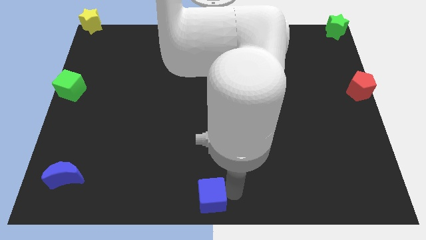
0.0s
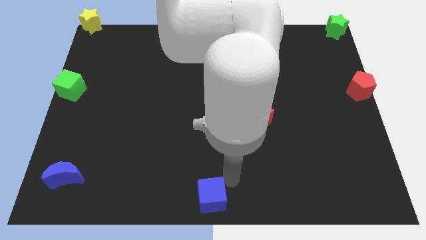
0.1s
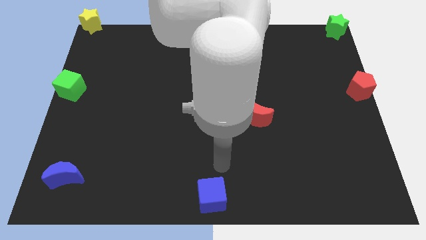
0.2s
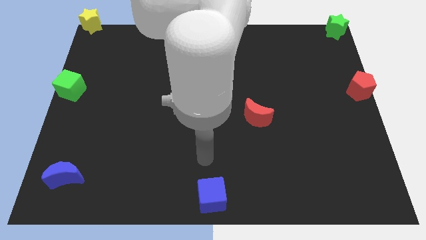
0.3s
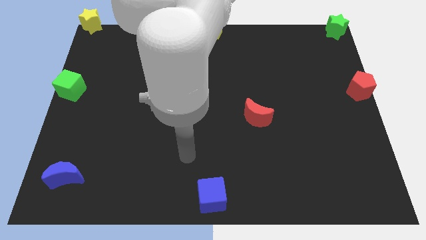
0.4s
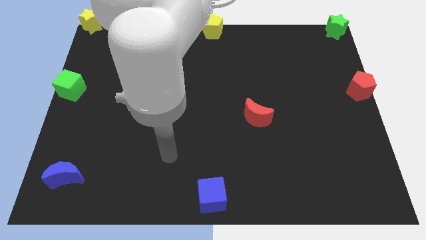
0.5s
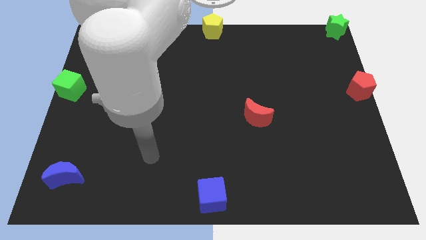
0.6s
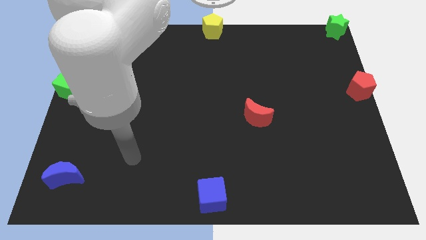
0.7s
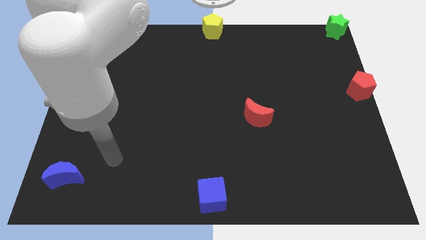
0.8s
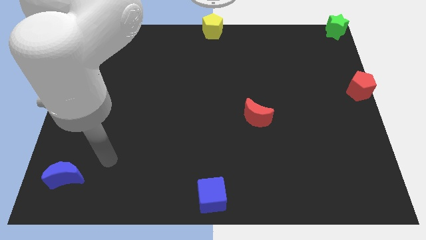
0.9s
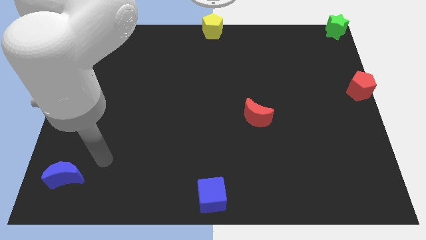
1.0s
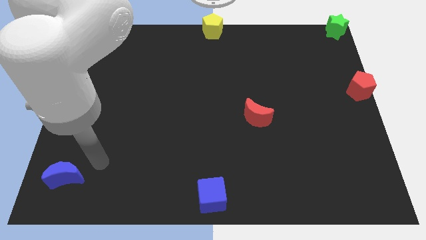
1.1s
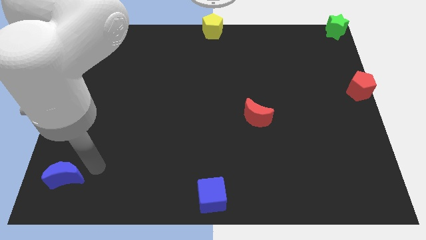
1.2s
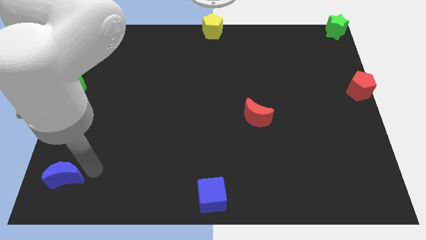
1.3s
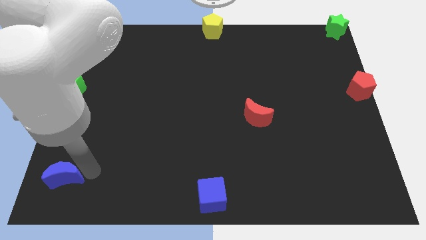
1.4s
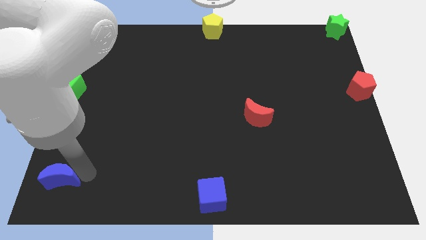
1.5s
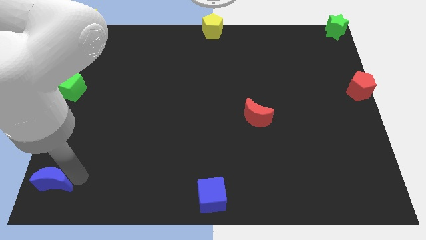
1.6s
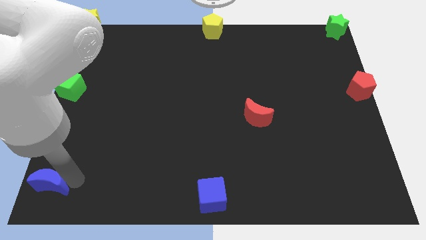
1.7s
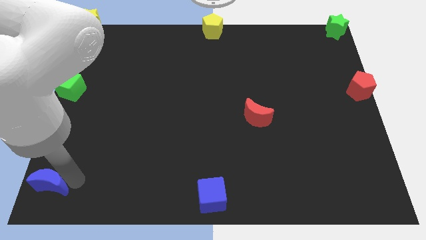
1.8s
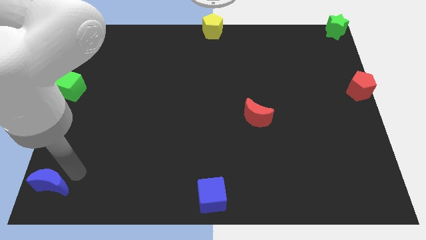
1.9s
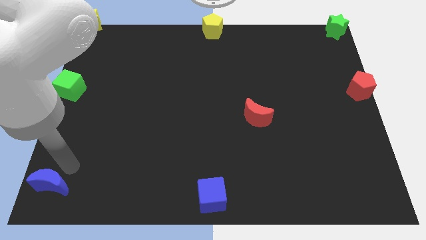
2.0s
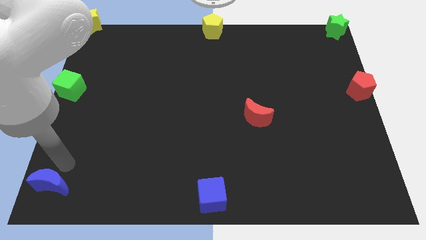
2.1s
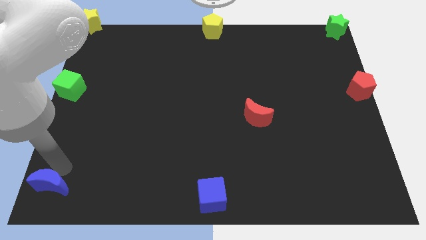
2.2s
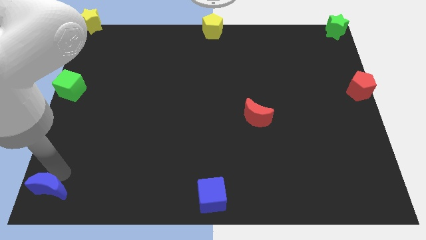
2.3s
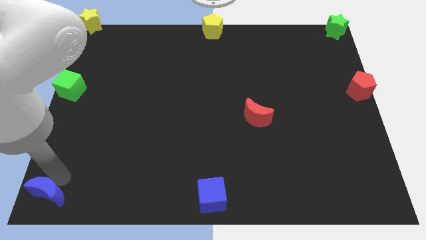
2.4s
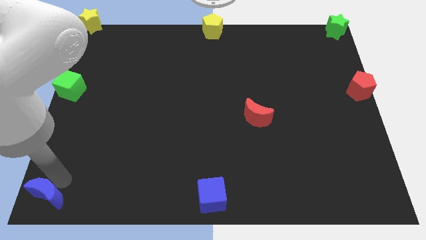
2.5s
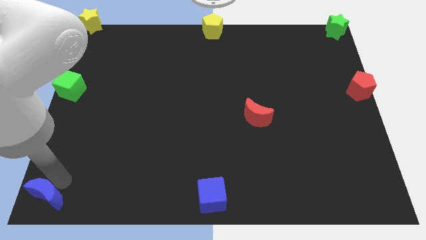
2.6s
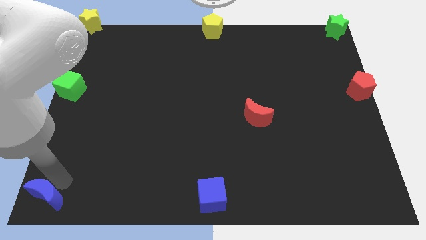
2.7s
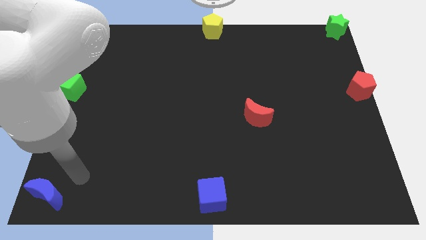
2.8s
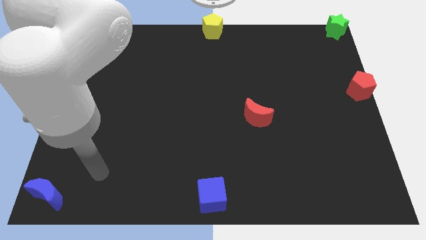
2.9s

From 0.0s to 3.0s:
slightly move the blue moon to the bottom left corner of the board

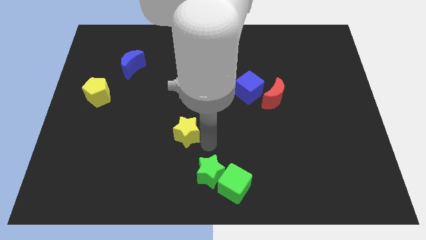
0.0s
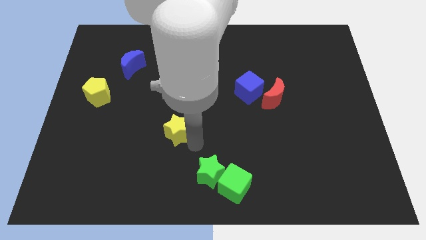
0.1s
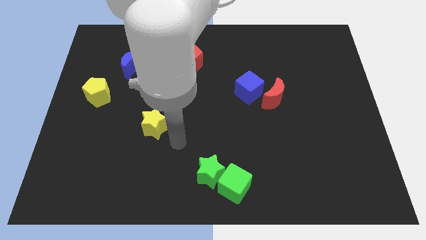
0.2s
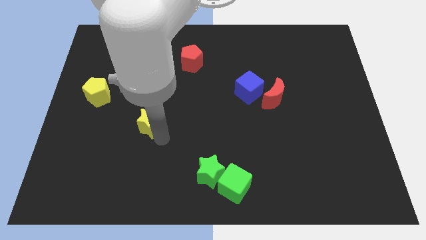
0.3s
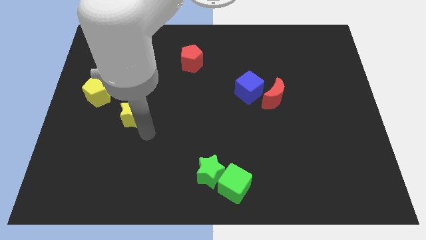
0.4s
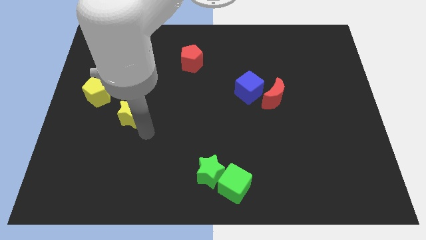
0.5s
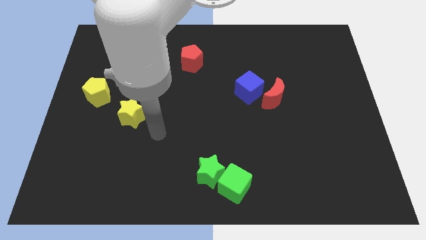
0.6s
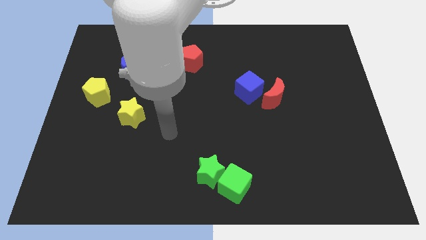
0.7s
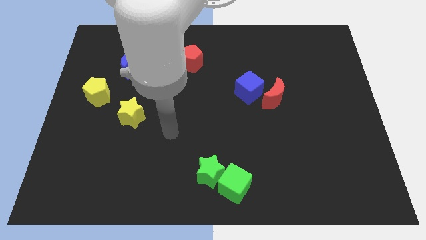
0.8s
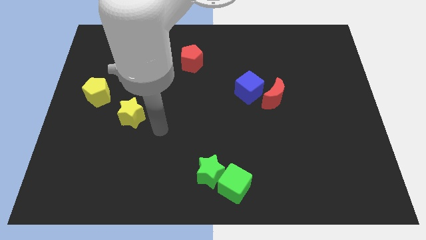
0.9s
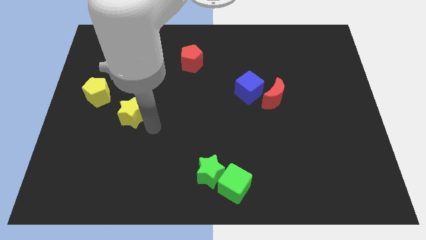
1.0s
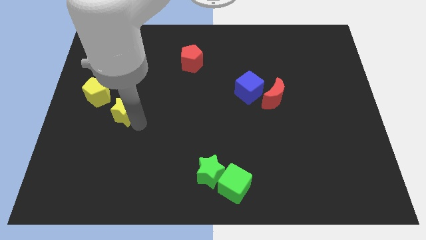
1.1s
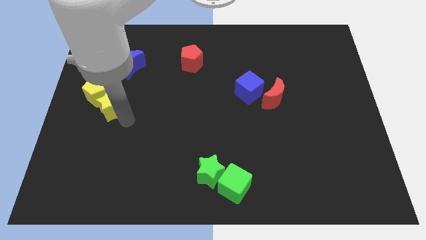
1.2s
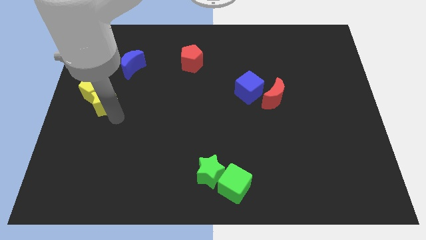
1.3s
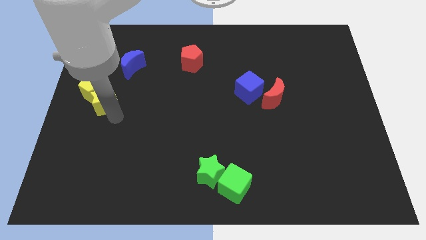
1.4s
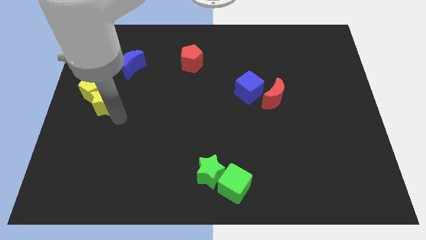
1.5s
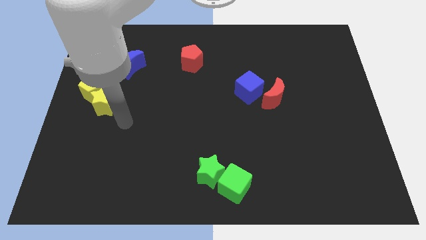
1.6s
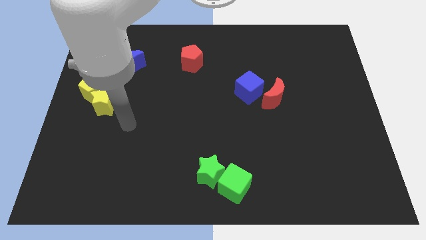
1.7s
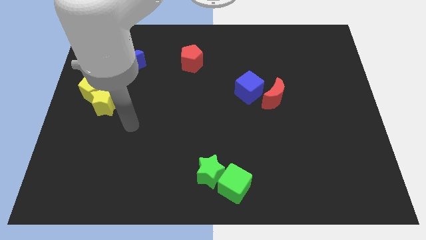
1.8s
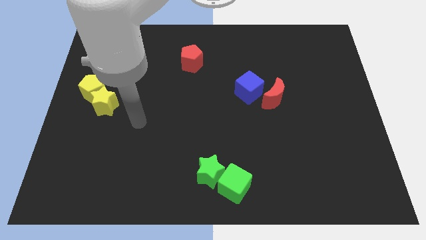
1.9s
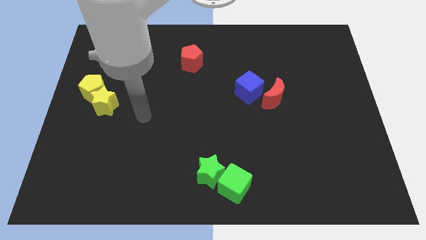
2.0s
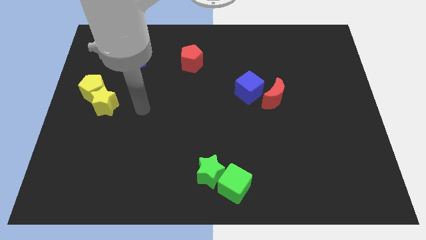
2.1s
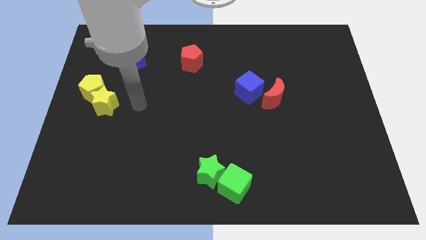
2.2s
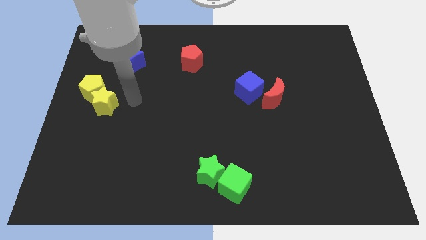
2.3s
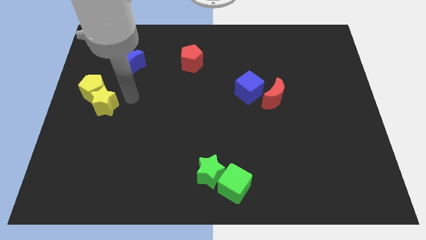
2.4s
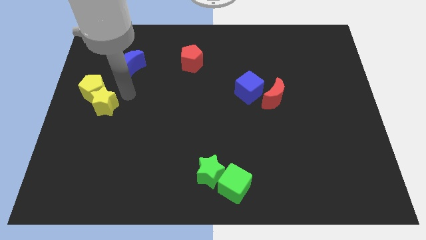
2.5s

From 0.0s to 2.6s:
move yellow star into yellow pentagon

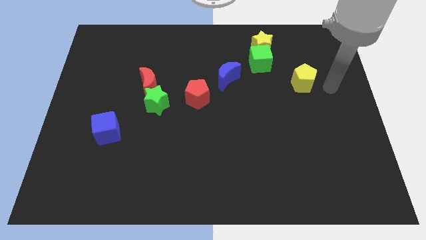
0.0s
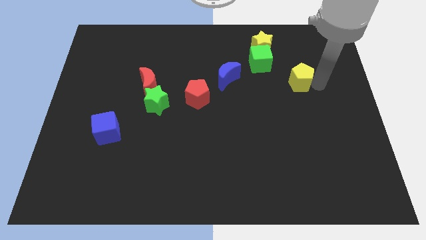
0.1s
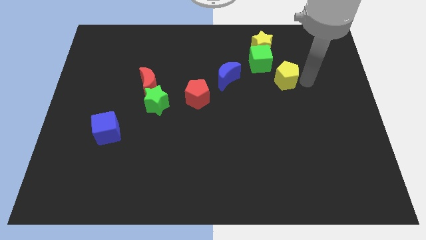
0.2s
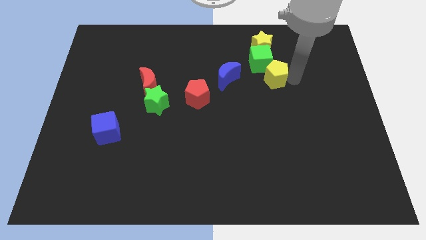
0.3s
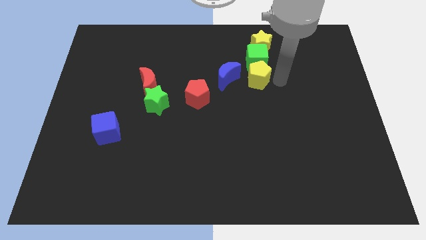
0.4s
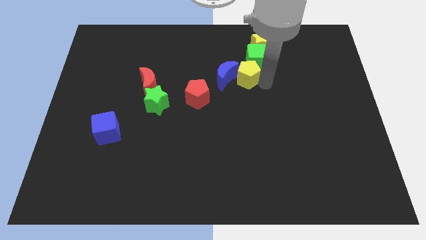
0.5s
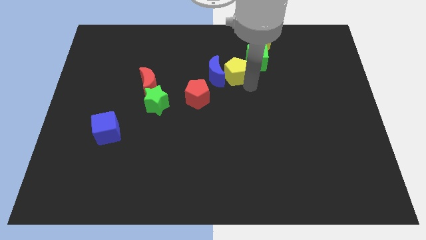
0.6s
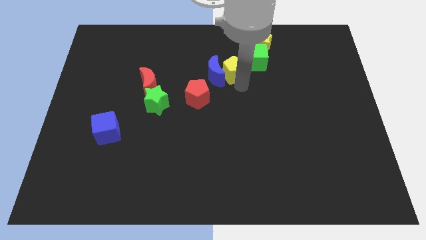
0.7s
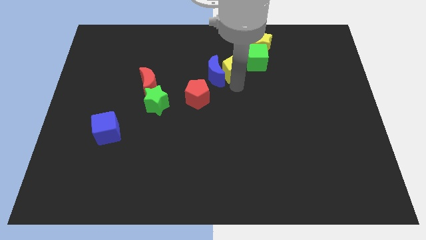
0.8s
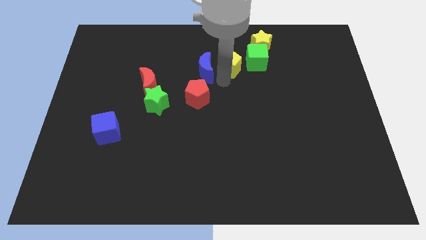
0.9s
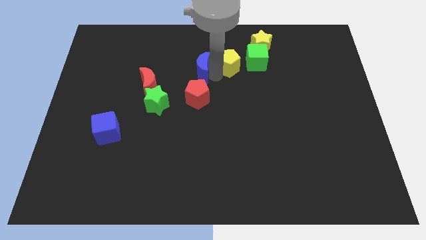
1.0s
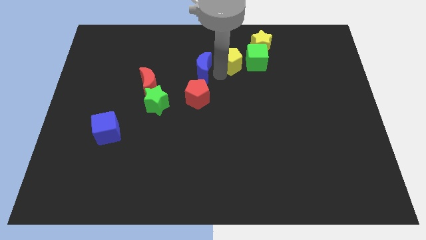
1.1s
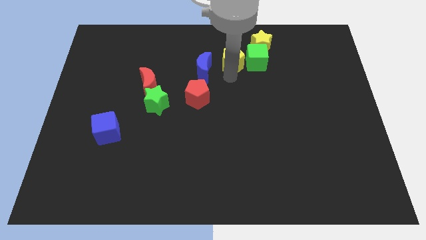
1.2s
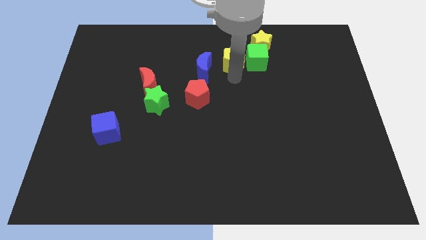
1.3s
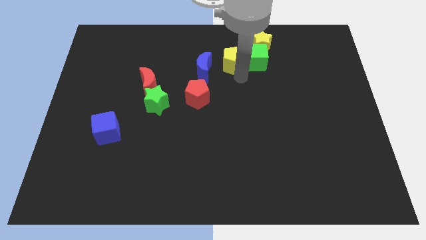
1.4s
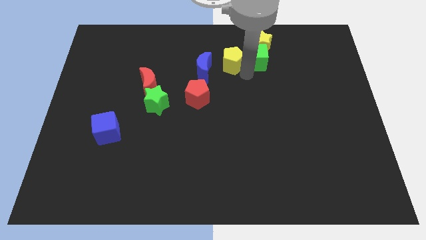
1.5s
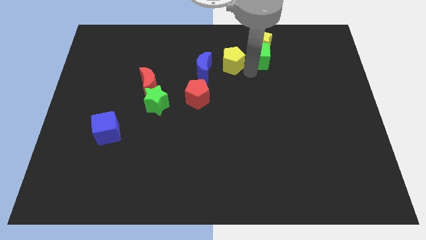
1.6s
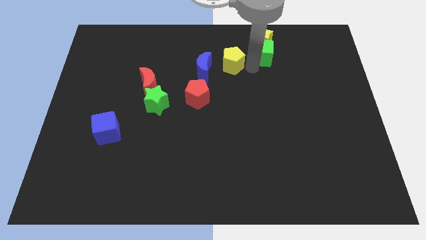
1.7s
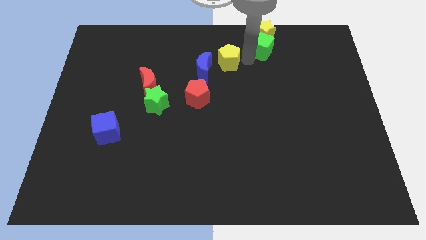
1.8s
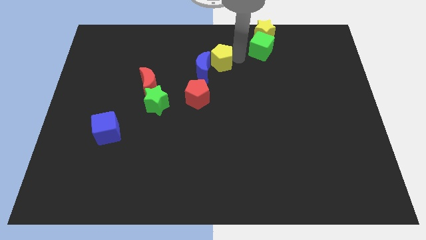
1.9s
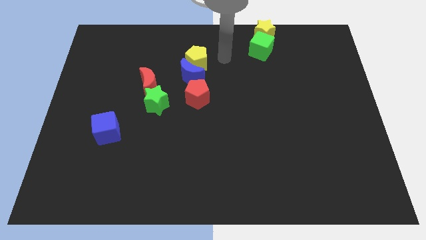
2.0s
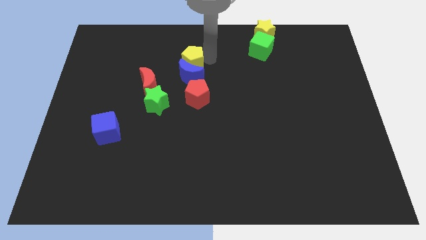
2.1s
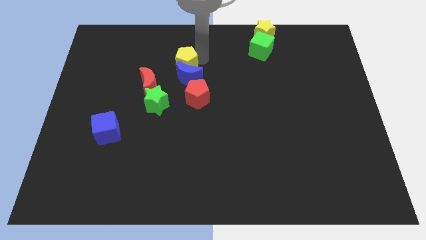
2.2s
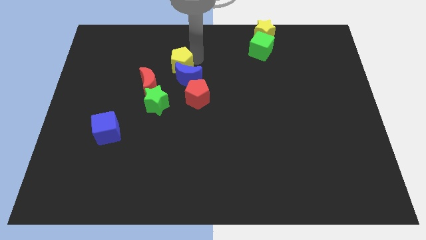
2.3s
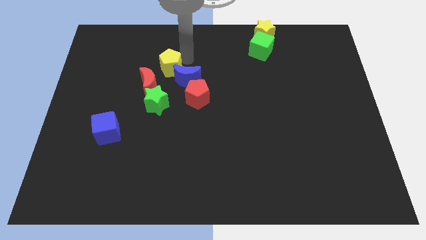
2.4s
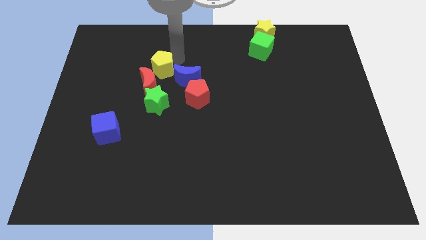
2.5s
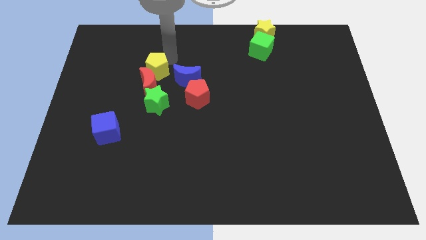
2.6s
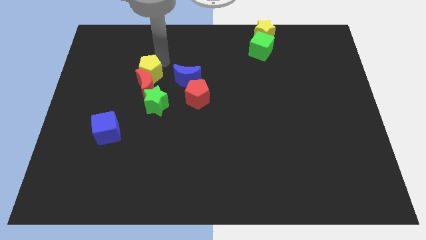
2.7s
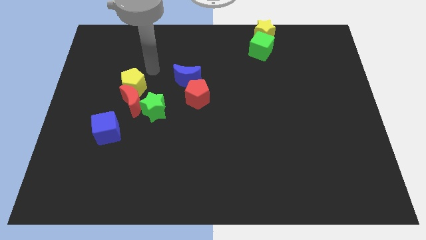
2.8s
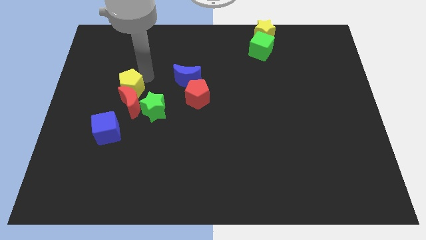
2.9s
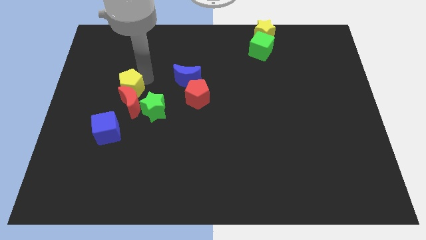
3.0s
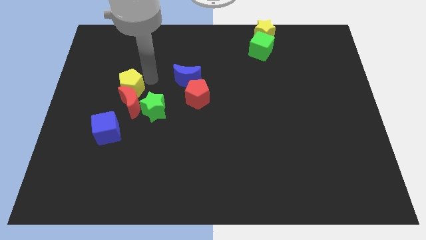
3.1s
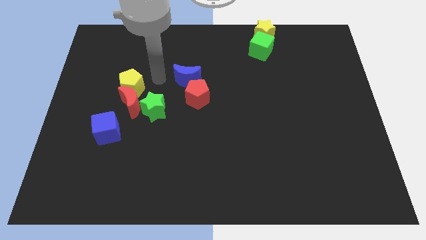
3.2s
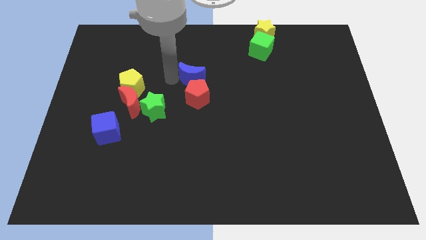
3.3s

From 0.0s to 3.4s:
push the yellow pentagon into the red cresccent
